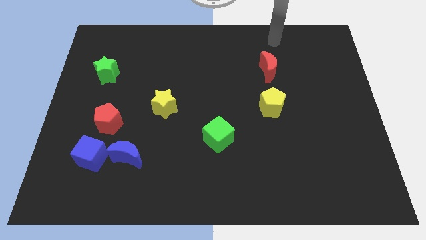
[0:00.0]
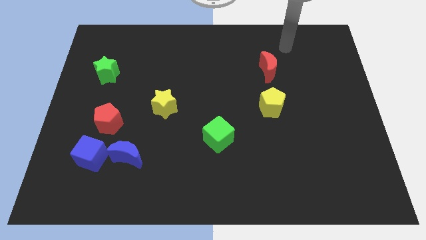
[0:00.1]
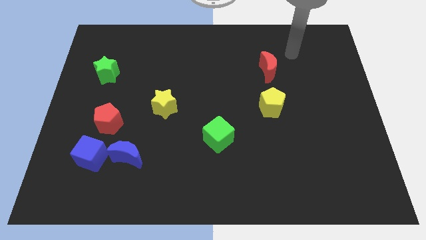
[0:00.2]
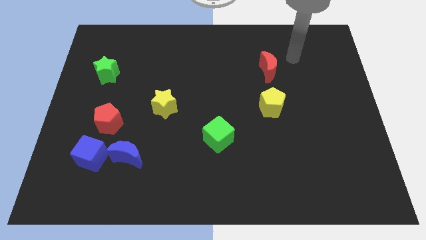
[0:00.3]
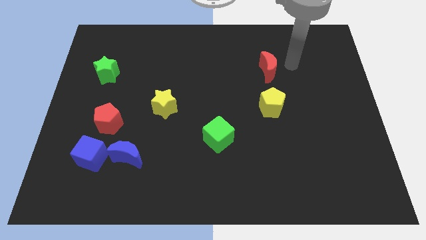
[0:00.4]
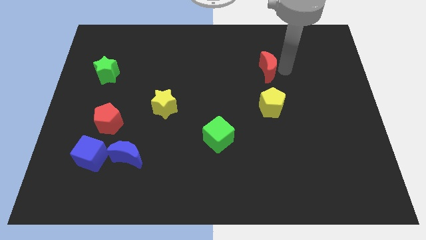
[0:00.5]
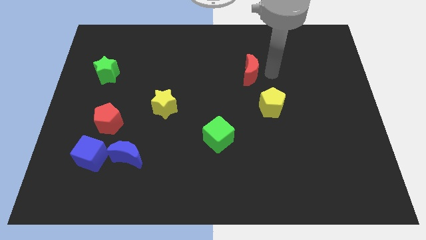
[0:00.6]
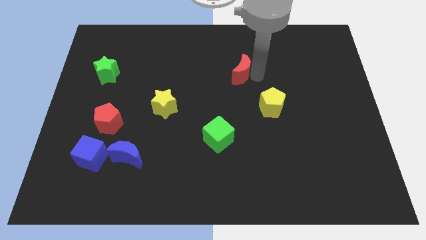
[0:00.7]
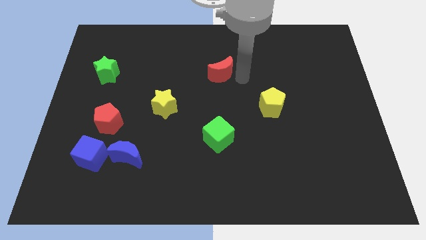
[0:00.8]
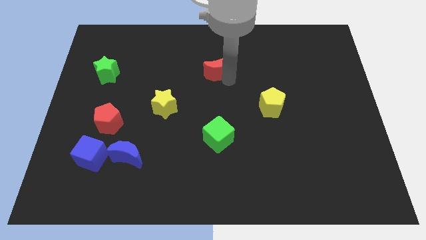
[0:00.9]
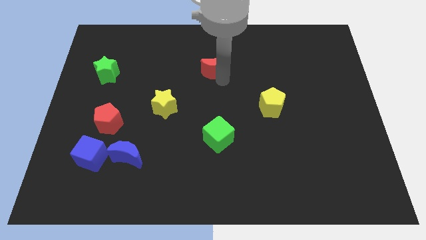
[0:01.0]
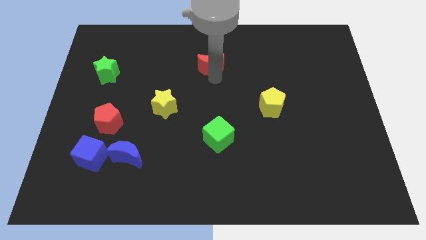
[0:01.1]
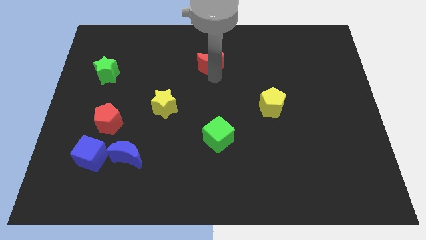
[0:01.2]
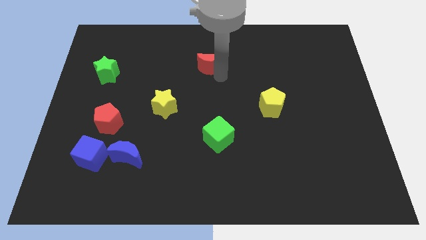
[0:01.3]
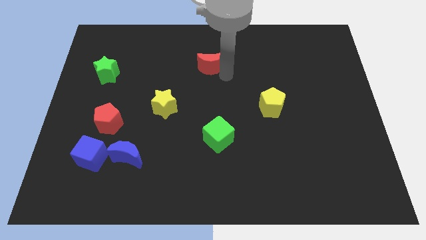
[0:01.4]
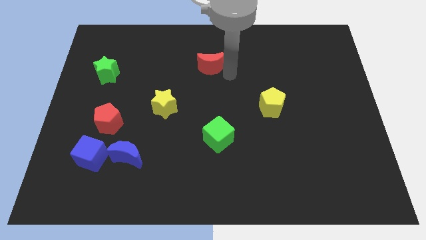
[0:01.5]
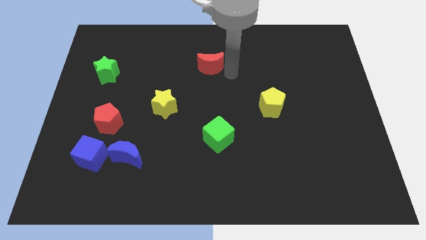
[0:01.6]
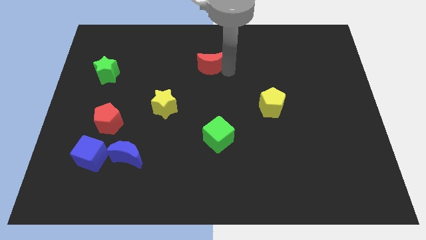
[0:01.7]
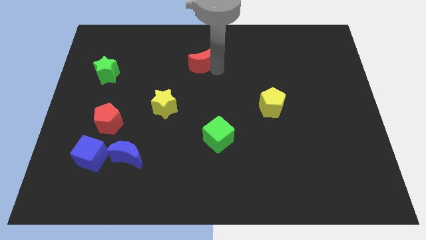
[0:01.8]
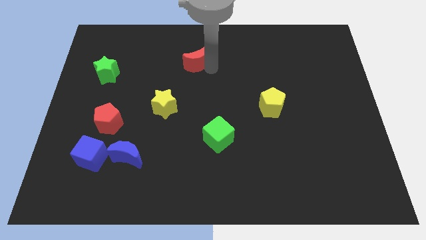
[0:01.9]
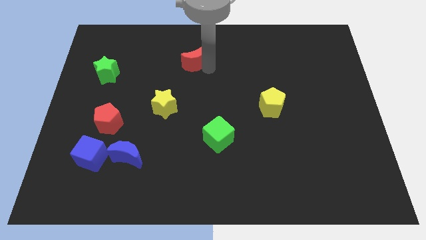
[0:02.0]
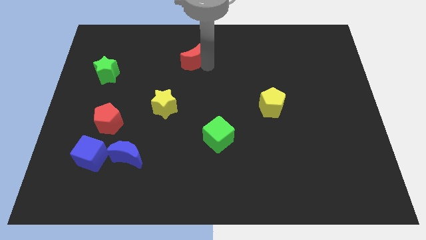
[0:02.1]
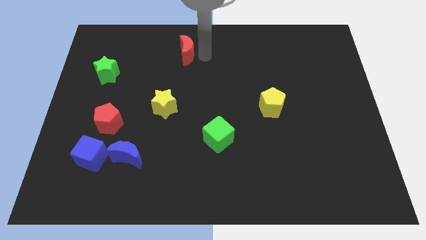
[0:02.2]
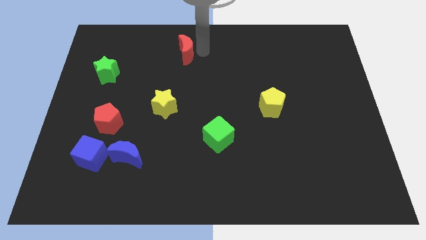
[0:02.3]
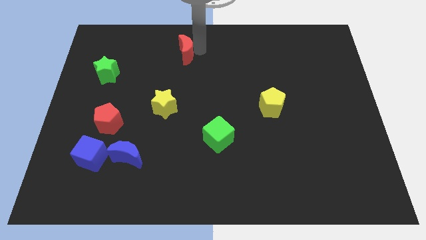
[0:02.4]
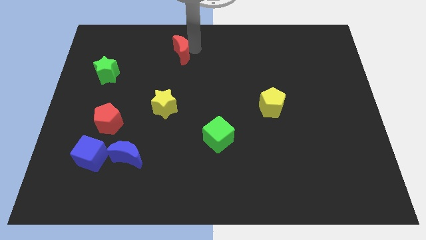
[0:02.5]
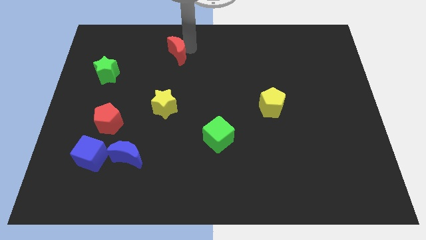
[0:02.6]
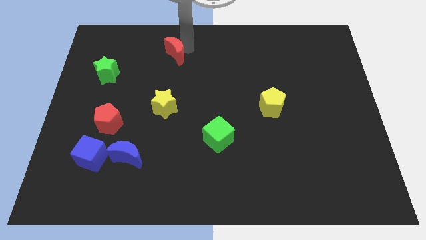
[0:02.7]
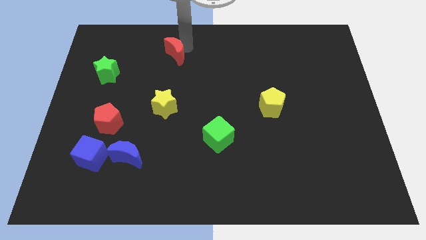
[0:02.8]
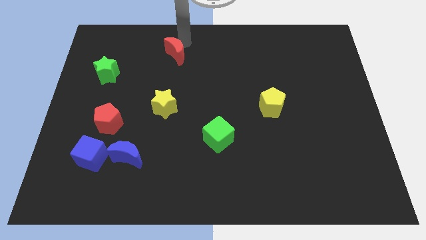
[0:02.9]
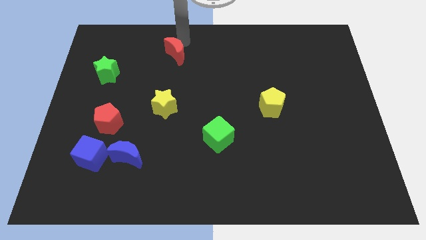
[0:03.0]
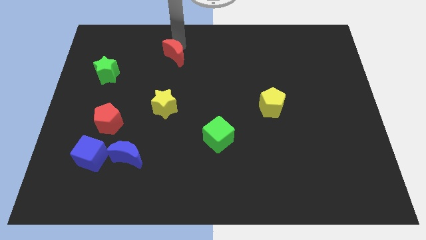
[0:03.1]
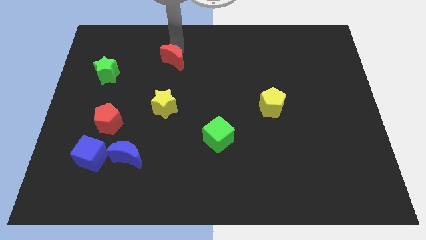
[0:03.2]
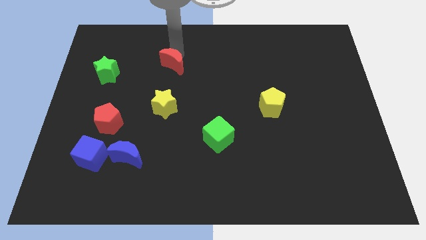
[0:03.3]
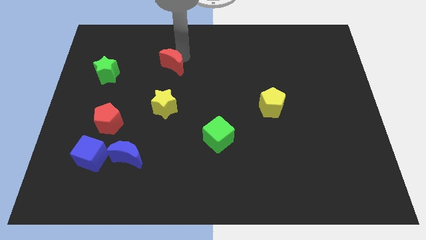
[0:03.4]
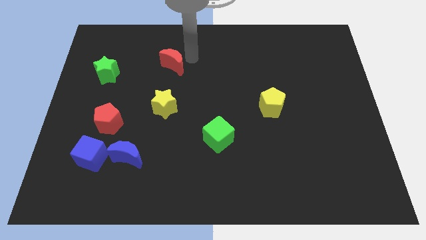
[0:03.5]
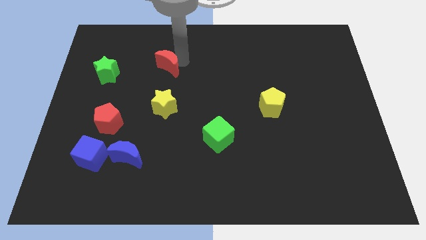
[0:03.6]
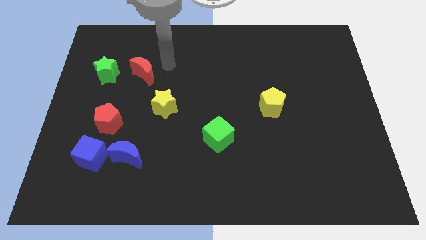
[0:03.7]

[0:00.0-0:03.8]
move the red crescent vertical to the yellow star

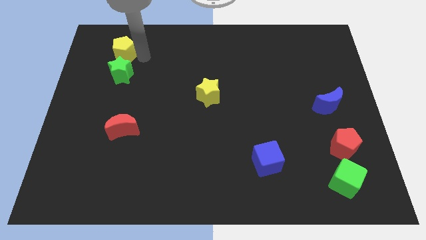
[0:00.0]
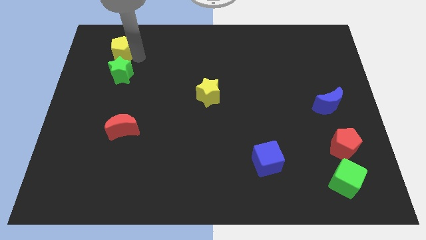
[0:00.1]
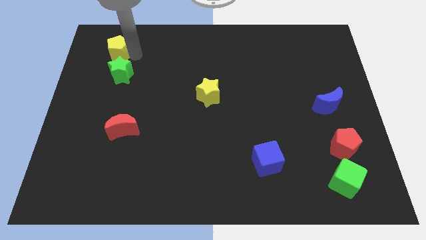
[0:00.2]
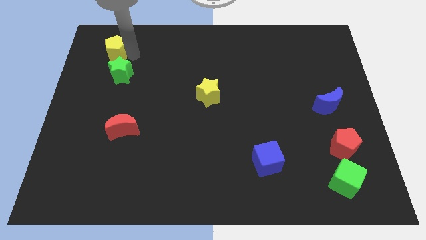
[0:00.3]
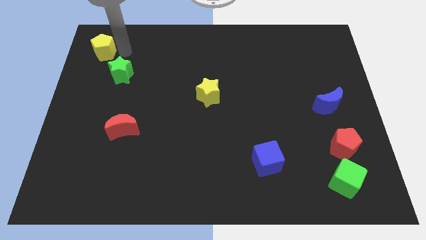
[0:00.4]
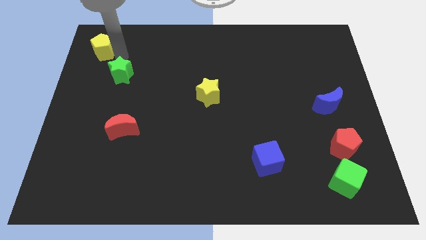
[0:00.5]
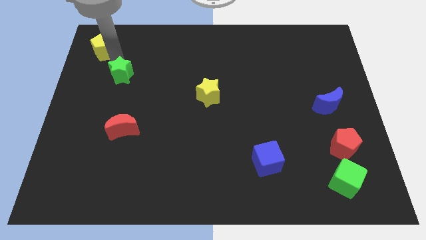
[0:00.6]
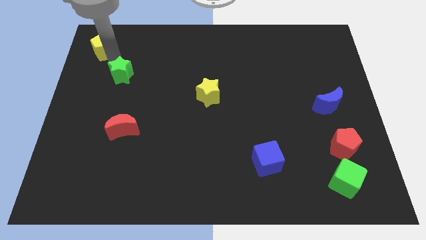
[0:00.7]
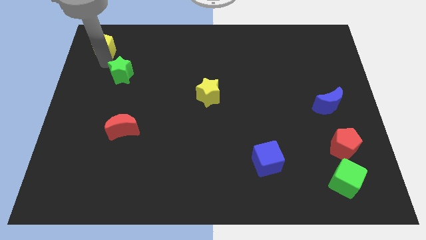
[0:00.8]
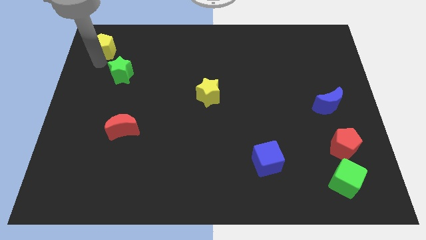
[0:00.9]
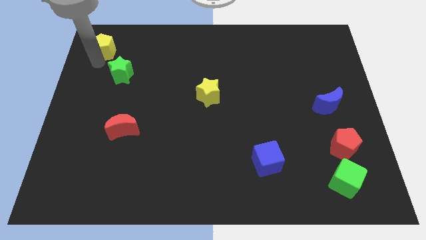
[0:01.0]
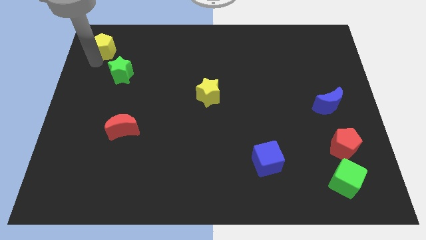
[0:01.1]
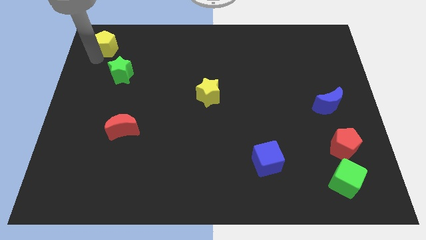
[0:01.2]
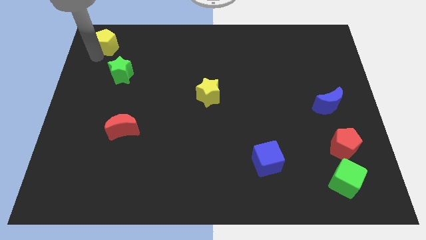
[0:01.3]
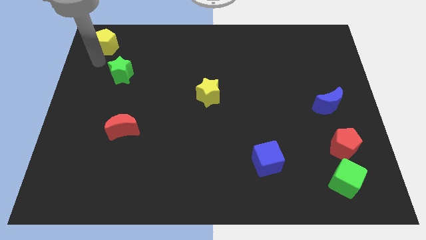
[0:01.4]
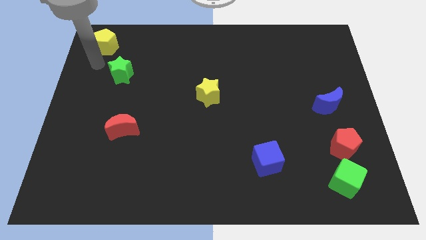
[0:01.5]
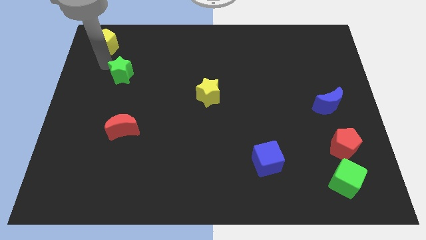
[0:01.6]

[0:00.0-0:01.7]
move the yellow pentagon towards top left of the board

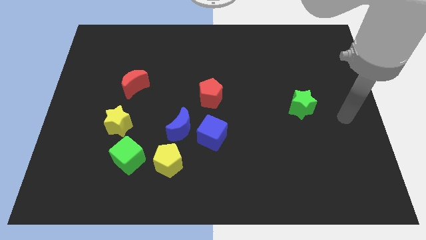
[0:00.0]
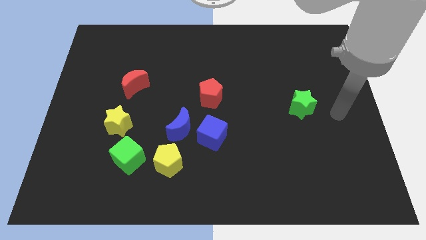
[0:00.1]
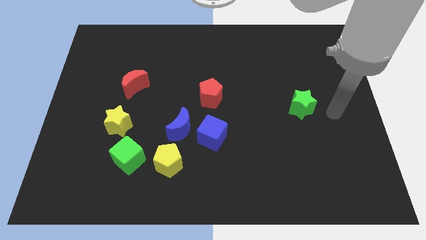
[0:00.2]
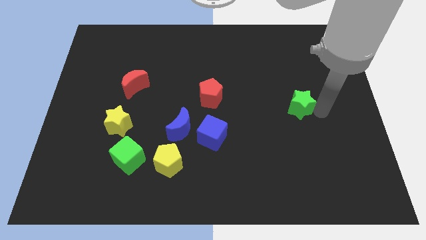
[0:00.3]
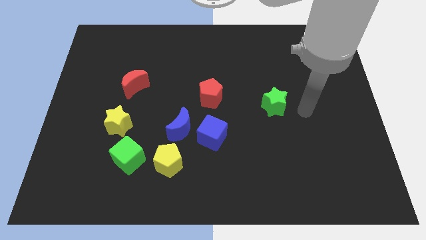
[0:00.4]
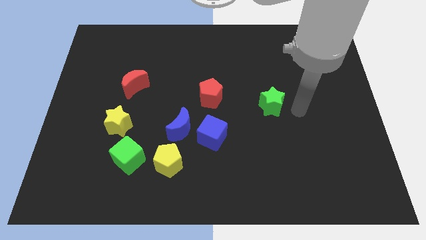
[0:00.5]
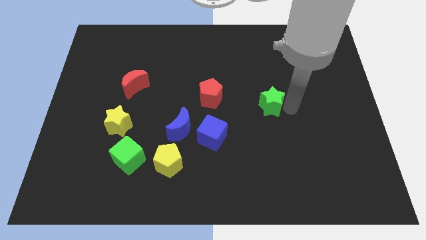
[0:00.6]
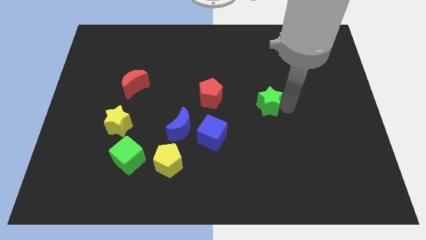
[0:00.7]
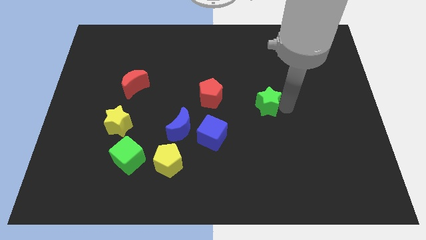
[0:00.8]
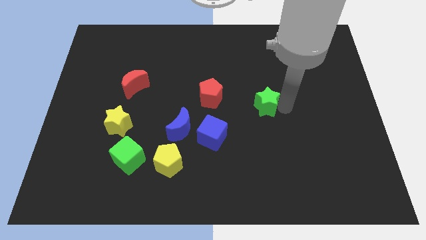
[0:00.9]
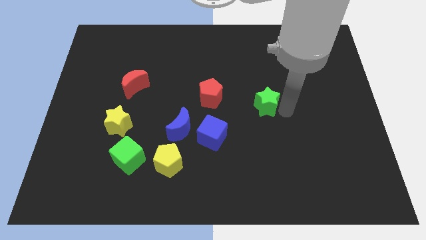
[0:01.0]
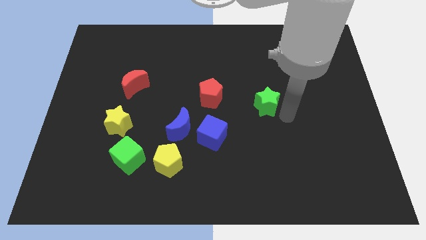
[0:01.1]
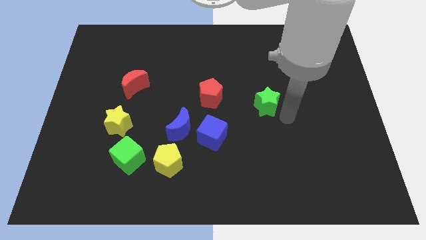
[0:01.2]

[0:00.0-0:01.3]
move the green star to the right of the red pentagon

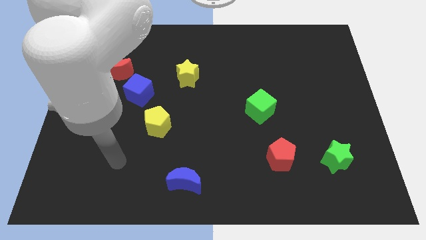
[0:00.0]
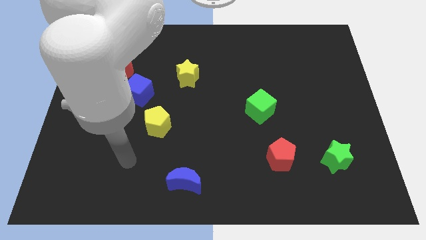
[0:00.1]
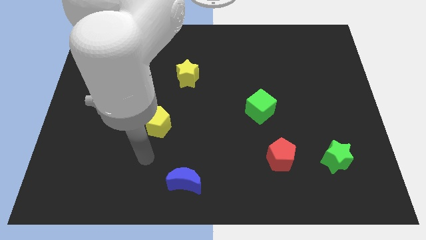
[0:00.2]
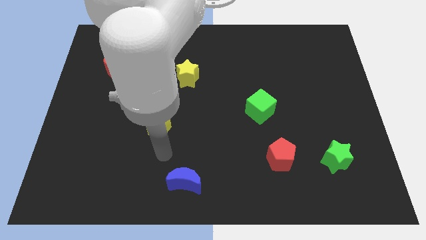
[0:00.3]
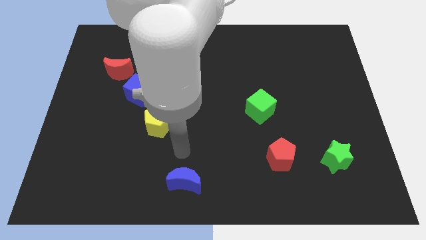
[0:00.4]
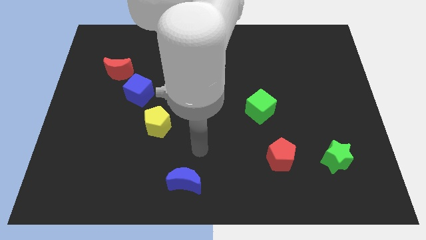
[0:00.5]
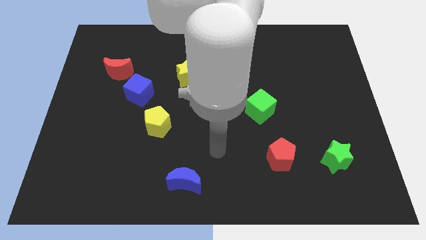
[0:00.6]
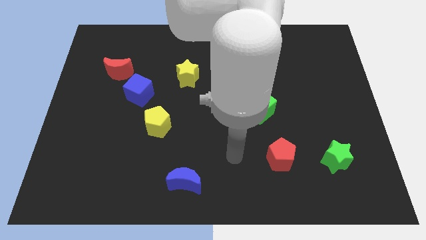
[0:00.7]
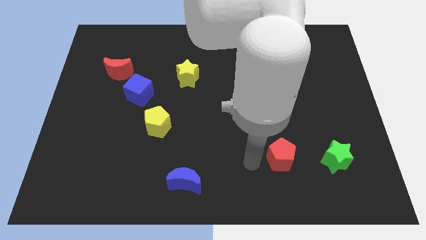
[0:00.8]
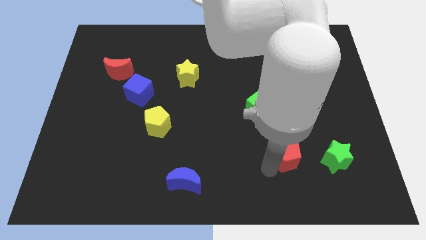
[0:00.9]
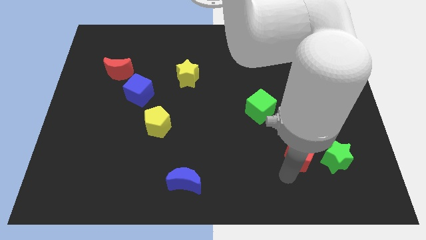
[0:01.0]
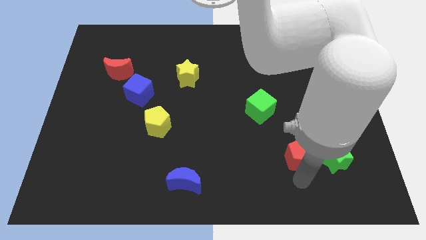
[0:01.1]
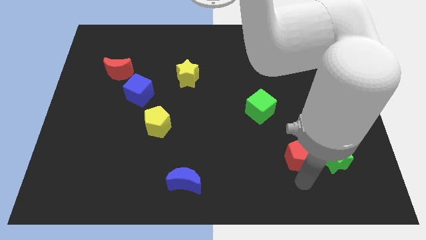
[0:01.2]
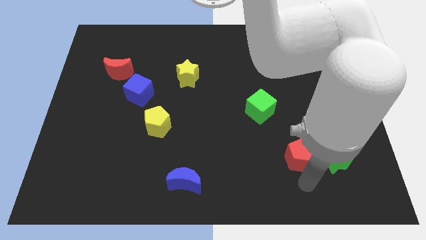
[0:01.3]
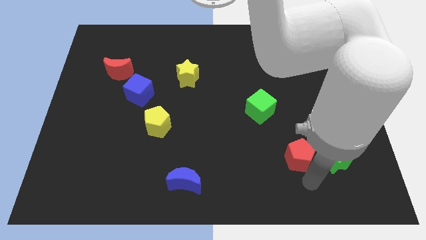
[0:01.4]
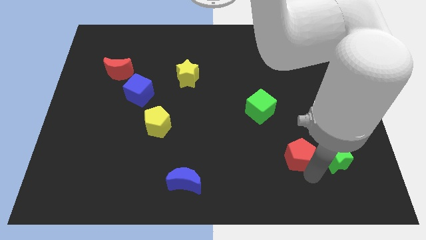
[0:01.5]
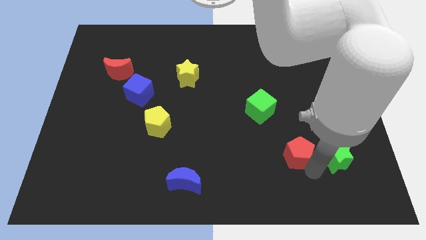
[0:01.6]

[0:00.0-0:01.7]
point your arm below red pentagon

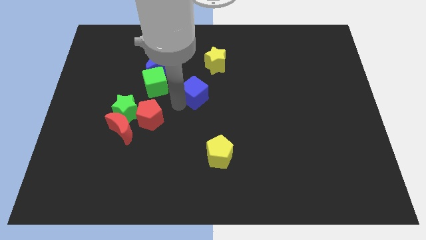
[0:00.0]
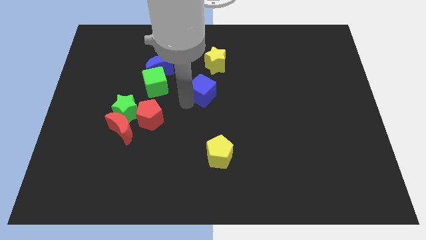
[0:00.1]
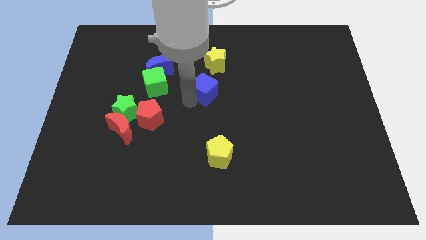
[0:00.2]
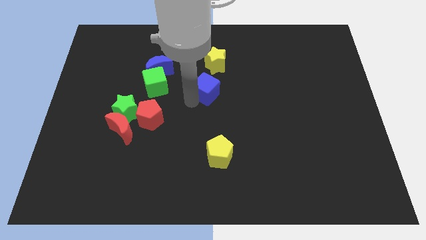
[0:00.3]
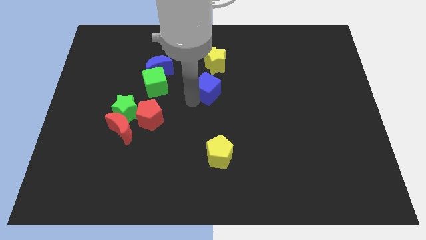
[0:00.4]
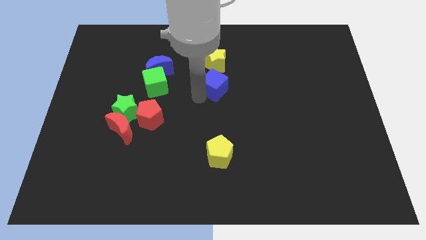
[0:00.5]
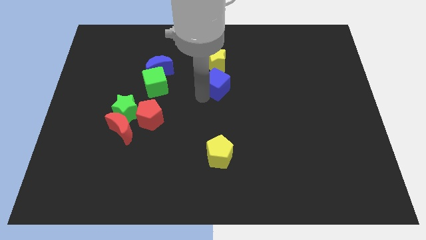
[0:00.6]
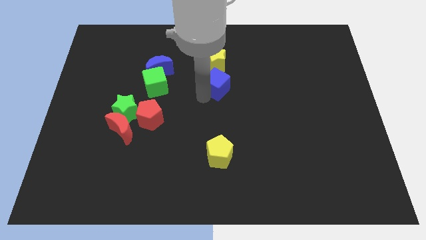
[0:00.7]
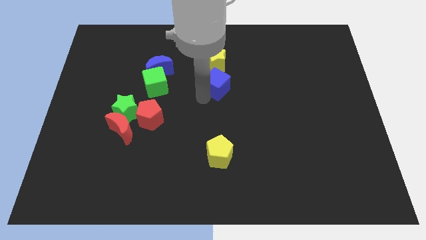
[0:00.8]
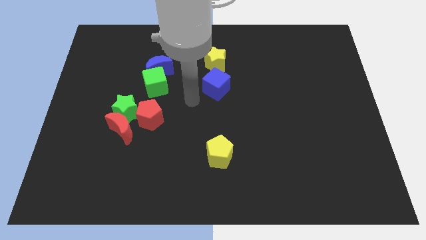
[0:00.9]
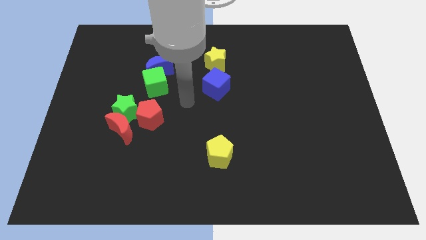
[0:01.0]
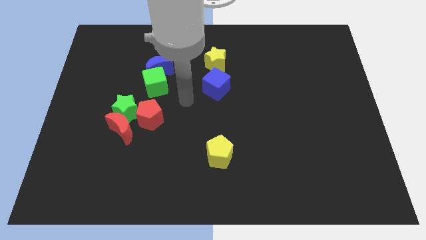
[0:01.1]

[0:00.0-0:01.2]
push blue cube below yellow star
